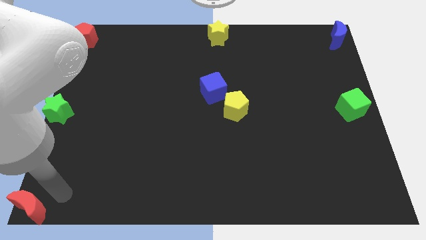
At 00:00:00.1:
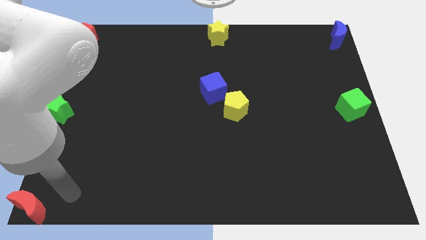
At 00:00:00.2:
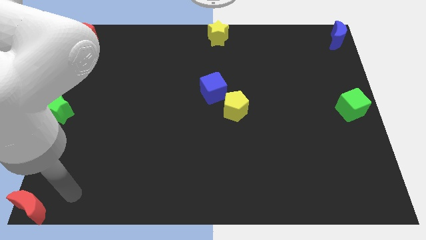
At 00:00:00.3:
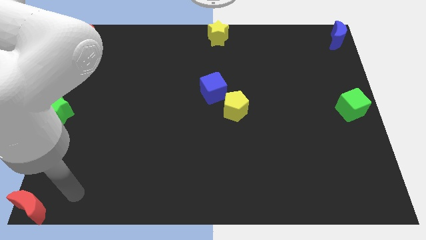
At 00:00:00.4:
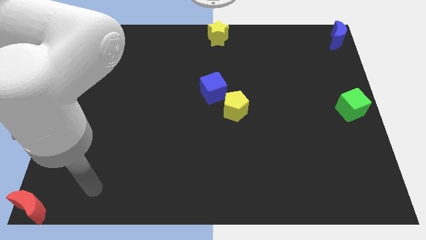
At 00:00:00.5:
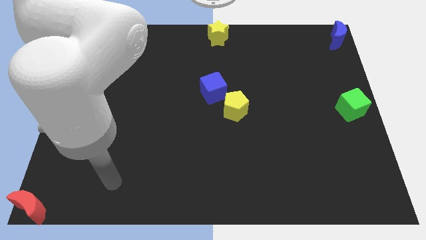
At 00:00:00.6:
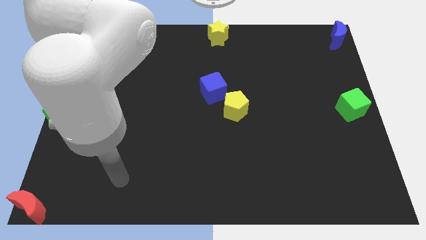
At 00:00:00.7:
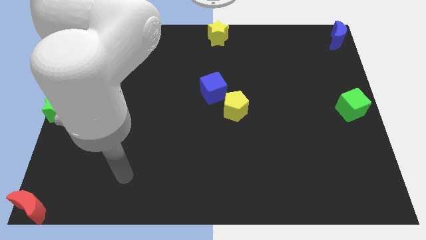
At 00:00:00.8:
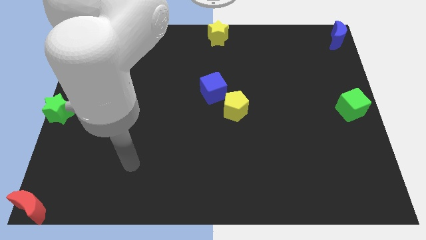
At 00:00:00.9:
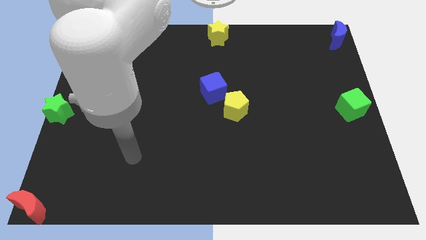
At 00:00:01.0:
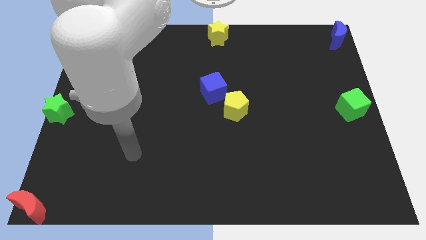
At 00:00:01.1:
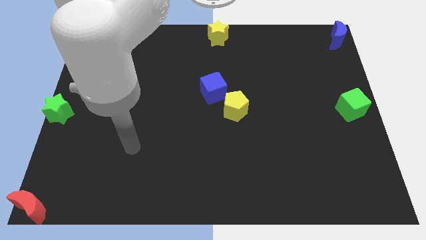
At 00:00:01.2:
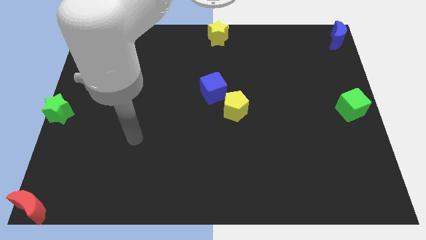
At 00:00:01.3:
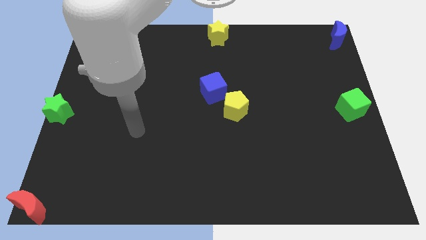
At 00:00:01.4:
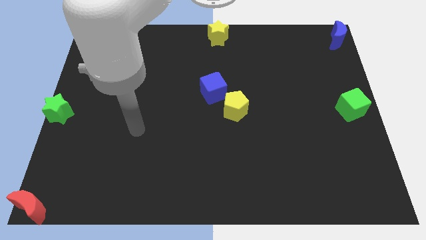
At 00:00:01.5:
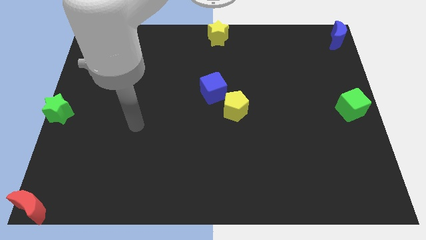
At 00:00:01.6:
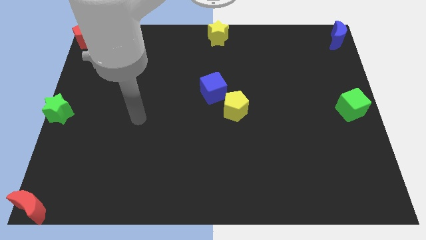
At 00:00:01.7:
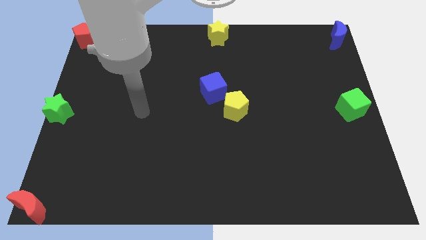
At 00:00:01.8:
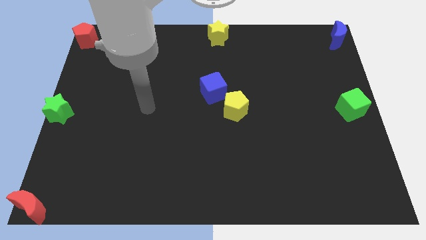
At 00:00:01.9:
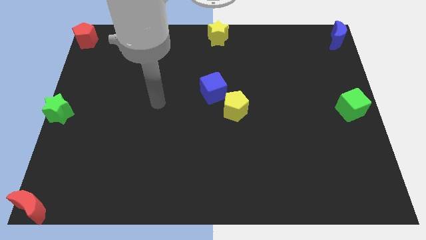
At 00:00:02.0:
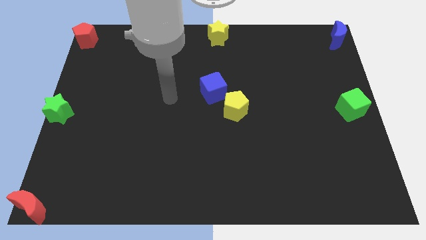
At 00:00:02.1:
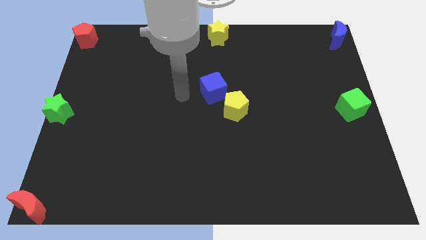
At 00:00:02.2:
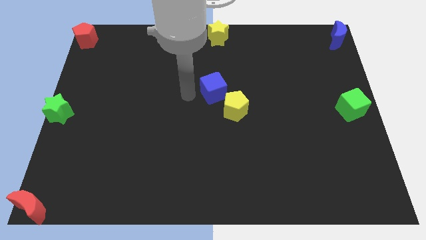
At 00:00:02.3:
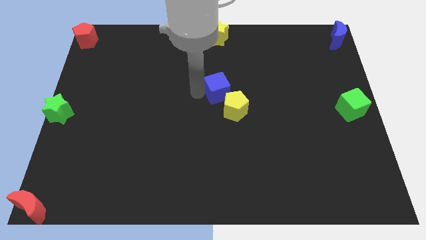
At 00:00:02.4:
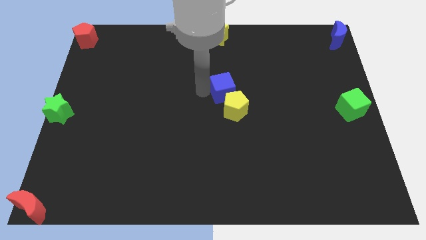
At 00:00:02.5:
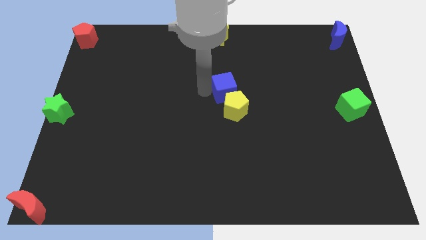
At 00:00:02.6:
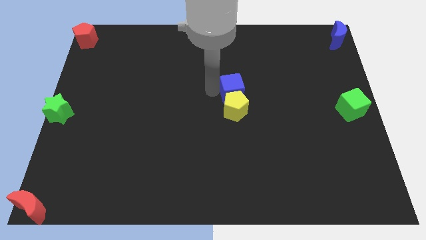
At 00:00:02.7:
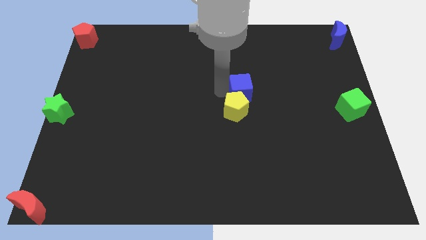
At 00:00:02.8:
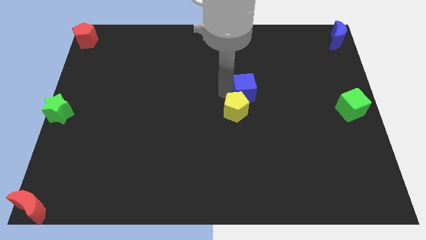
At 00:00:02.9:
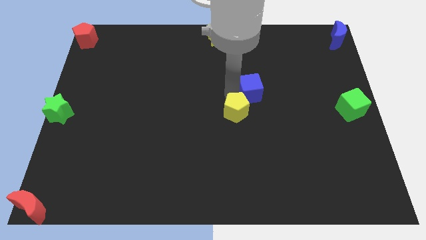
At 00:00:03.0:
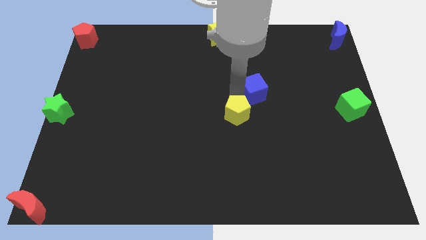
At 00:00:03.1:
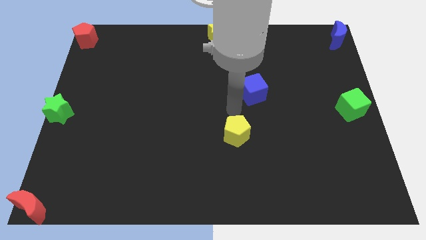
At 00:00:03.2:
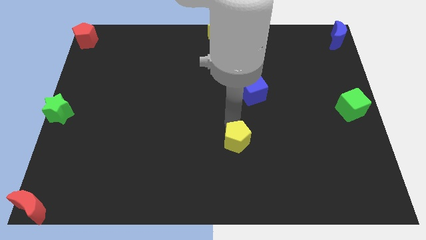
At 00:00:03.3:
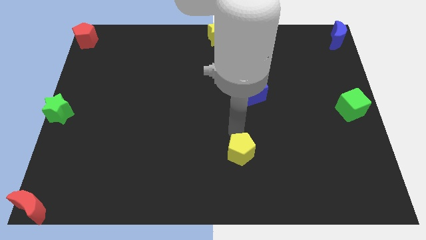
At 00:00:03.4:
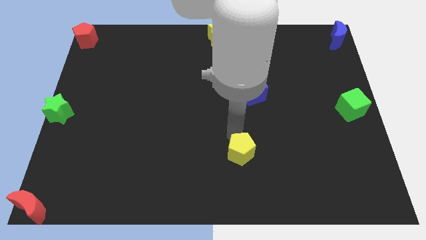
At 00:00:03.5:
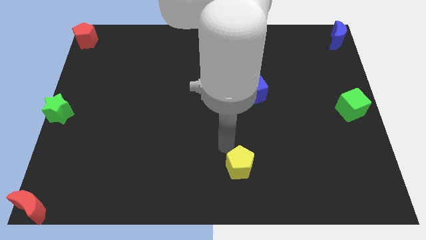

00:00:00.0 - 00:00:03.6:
separate the yellow pentagon and the blue cube

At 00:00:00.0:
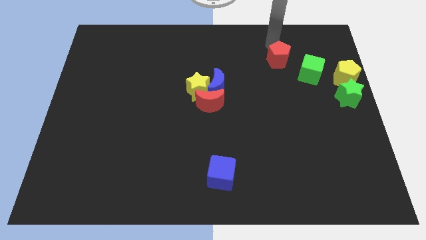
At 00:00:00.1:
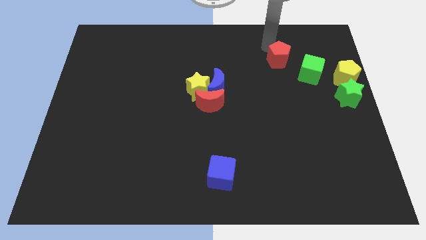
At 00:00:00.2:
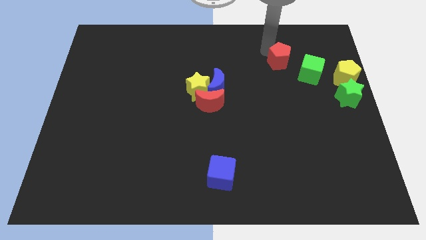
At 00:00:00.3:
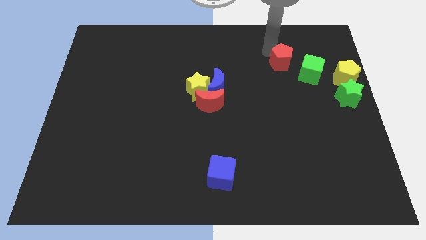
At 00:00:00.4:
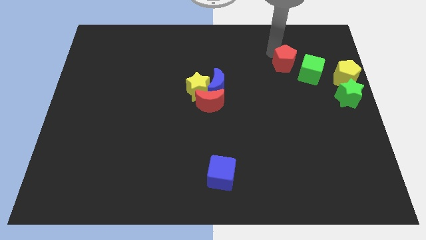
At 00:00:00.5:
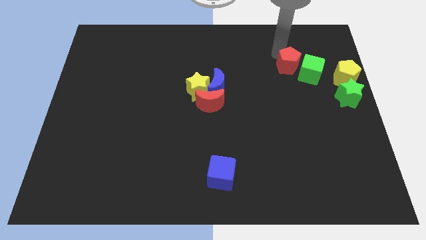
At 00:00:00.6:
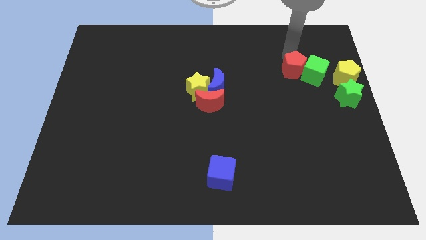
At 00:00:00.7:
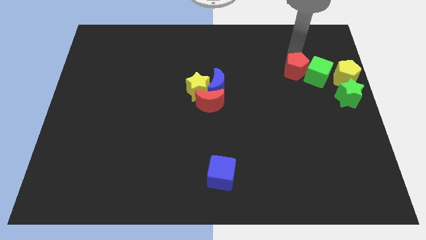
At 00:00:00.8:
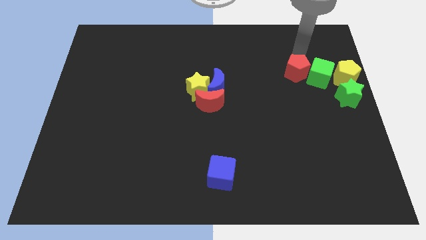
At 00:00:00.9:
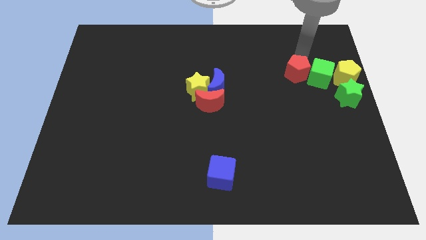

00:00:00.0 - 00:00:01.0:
push the red pentagon close to the green cube

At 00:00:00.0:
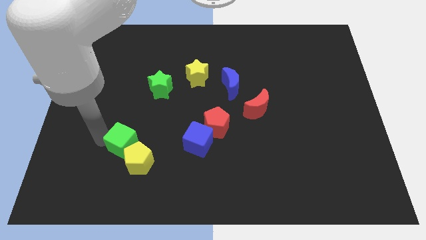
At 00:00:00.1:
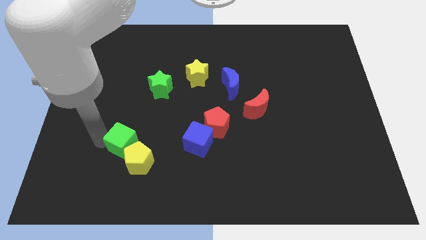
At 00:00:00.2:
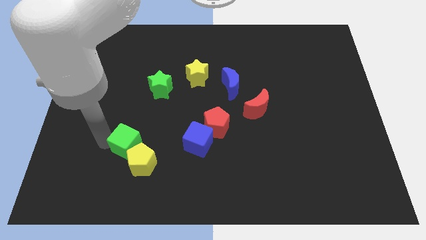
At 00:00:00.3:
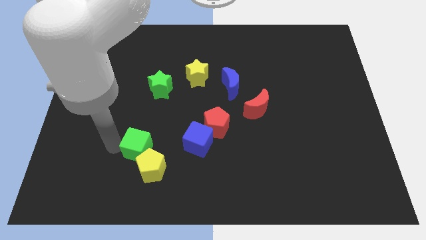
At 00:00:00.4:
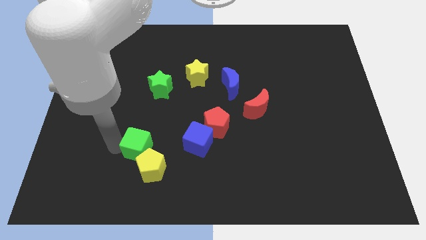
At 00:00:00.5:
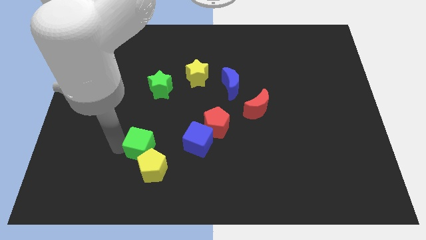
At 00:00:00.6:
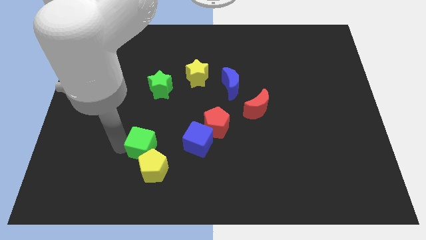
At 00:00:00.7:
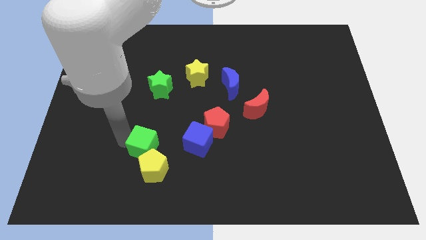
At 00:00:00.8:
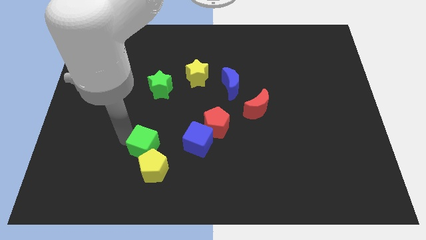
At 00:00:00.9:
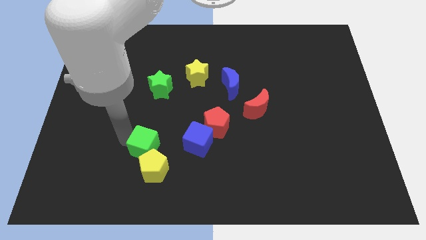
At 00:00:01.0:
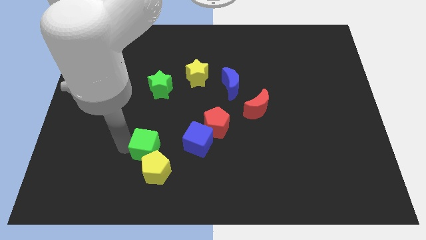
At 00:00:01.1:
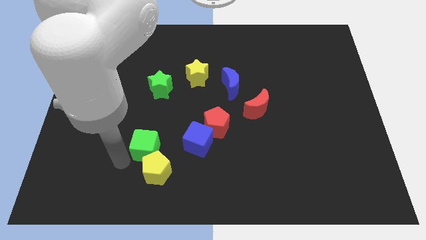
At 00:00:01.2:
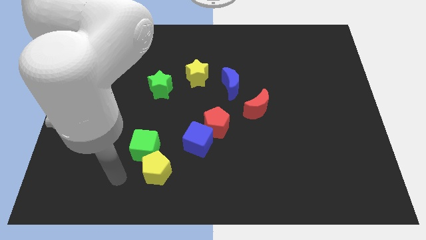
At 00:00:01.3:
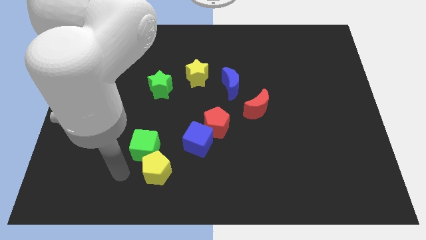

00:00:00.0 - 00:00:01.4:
push the yellow pentagon with the green cube towards the bottom center of the board

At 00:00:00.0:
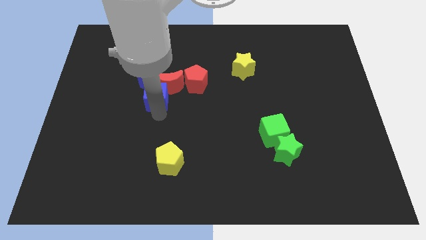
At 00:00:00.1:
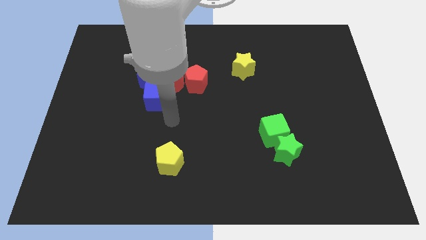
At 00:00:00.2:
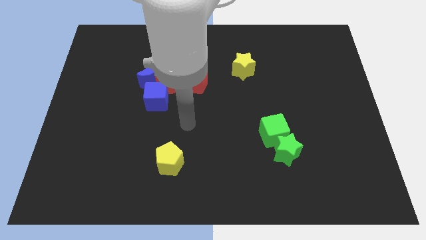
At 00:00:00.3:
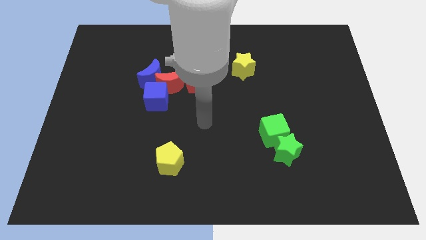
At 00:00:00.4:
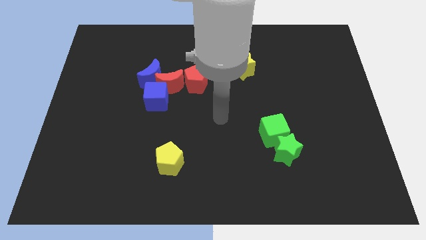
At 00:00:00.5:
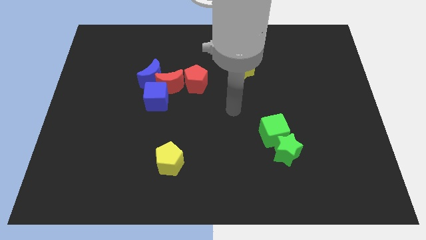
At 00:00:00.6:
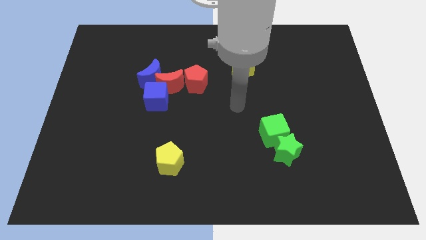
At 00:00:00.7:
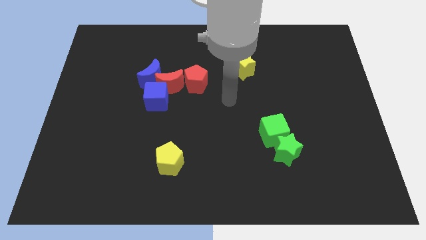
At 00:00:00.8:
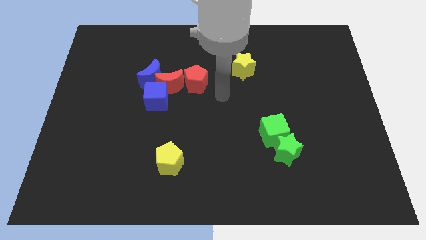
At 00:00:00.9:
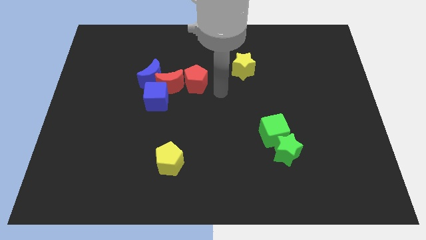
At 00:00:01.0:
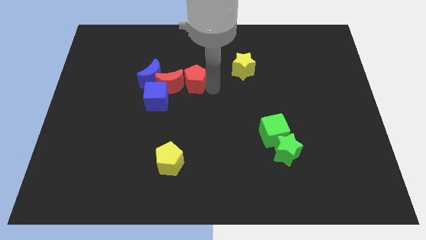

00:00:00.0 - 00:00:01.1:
move your arm to the right of the red pentagon

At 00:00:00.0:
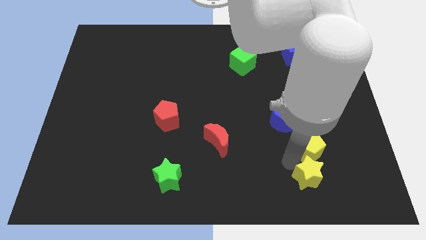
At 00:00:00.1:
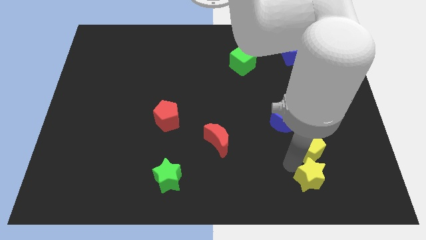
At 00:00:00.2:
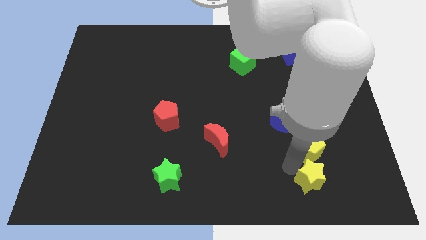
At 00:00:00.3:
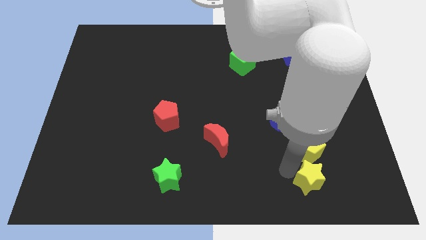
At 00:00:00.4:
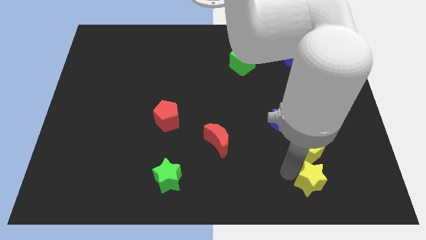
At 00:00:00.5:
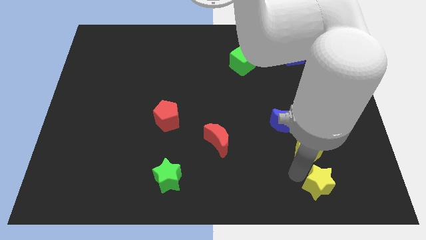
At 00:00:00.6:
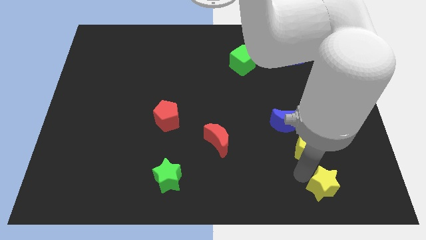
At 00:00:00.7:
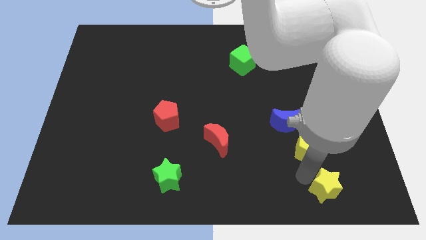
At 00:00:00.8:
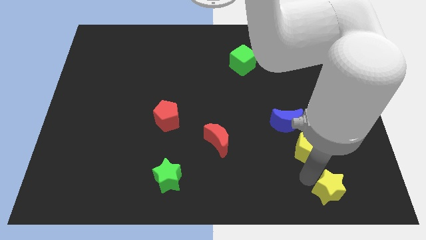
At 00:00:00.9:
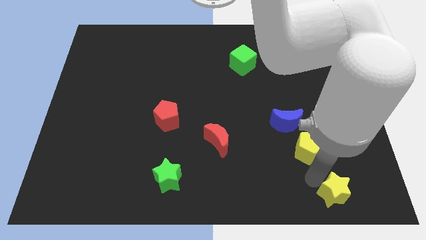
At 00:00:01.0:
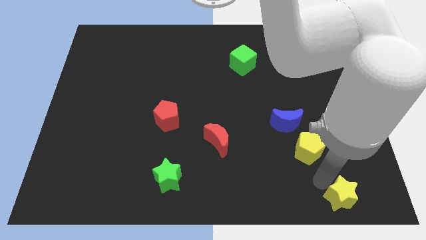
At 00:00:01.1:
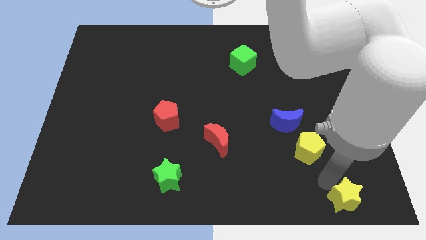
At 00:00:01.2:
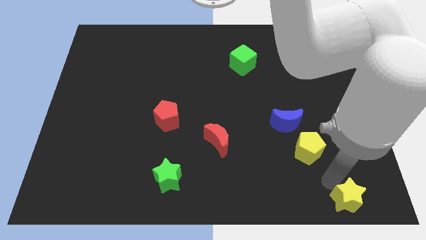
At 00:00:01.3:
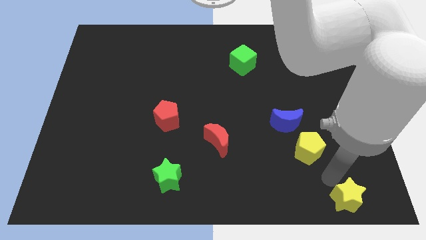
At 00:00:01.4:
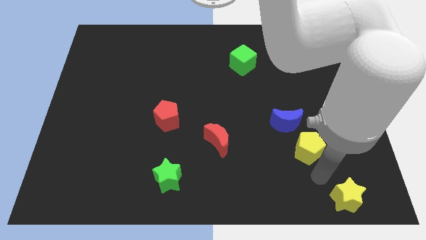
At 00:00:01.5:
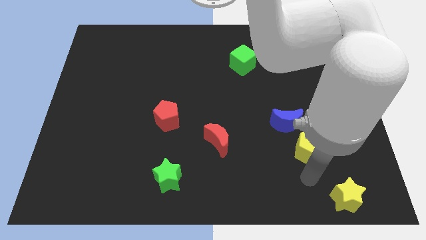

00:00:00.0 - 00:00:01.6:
push the yellow star towards the bottom right

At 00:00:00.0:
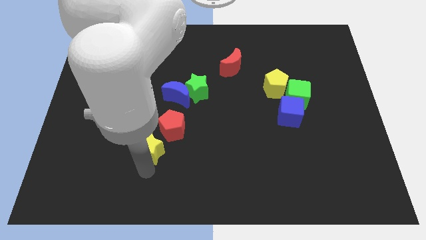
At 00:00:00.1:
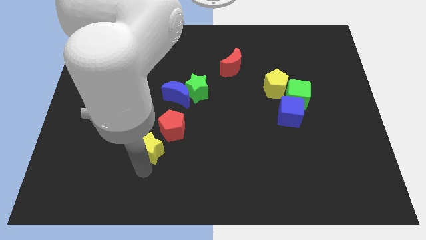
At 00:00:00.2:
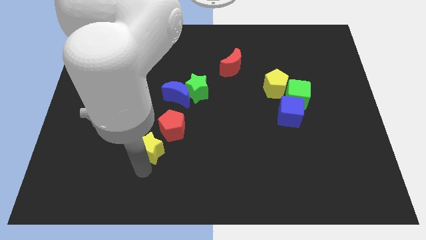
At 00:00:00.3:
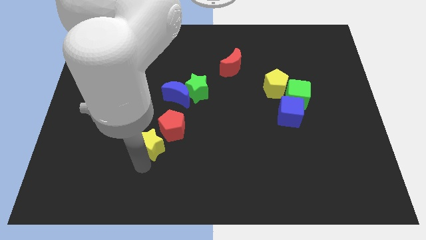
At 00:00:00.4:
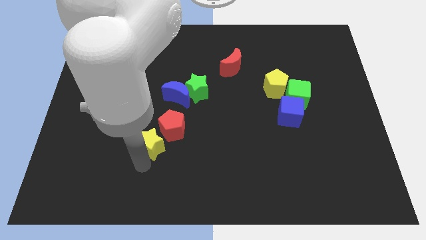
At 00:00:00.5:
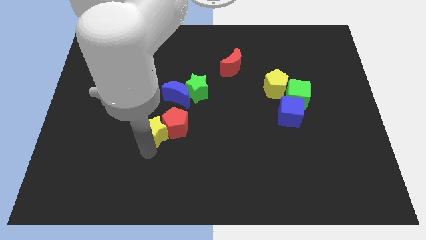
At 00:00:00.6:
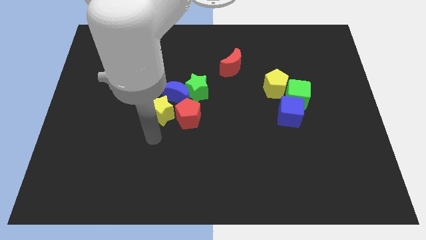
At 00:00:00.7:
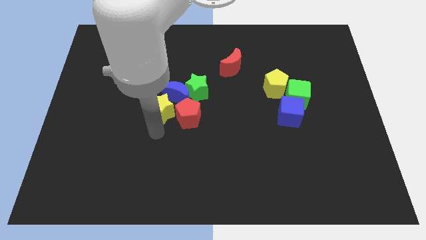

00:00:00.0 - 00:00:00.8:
push yellow star left to red pentagon
